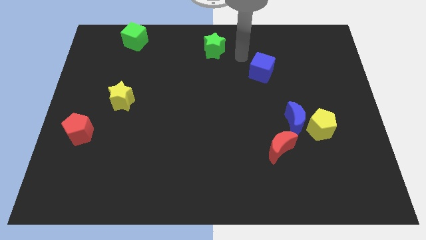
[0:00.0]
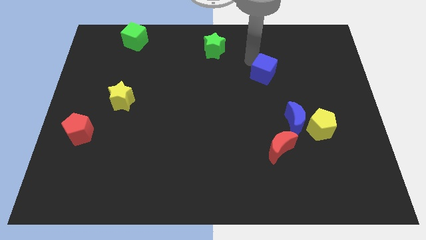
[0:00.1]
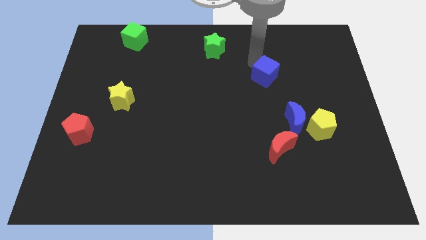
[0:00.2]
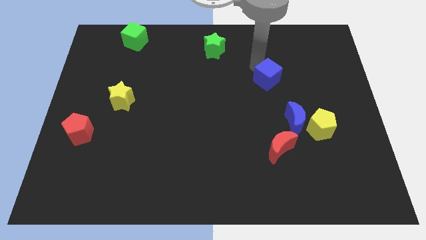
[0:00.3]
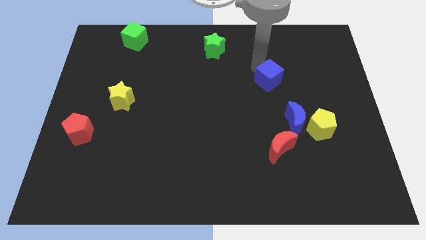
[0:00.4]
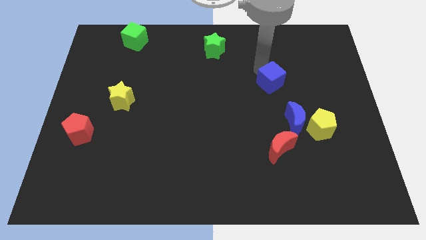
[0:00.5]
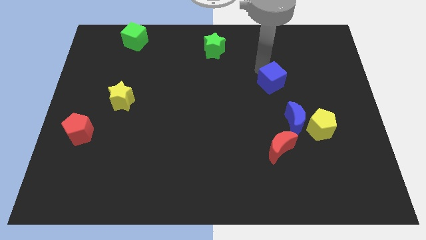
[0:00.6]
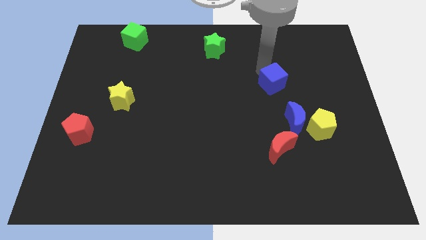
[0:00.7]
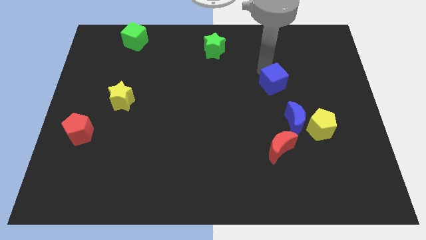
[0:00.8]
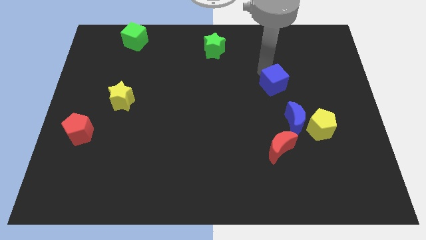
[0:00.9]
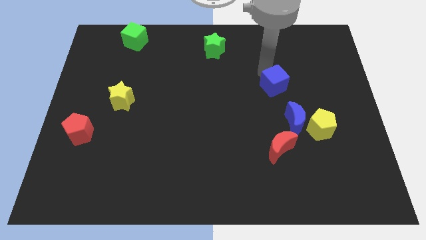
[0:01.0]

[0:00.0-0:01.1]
place blue cube on the top left of blue moon

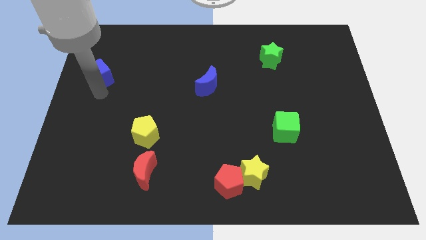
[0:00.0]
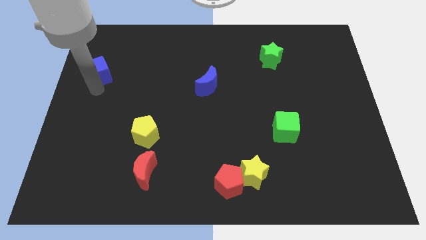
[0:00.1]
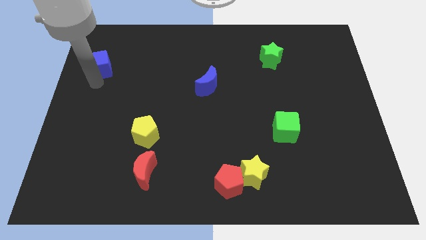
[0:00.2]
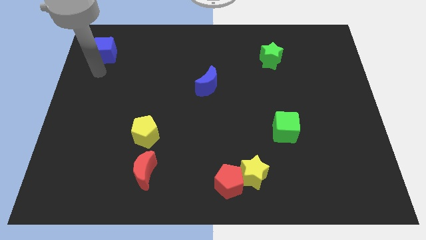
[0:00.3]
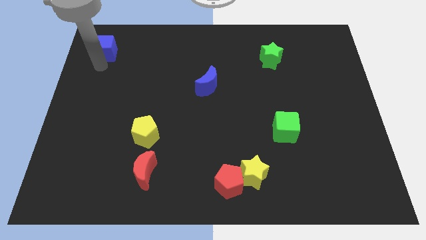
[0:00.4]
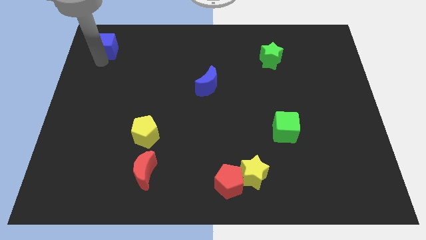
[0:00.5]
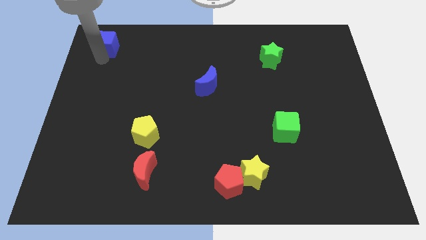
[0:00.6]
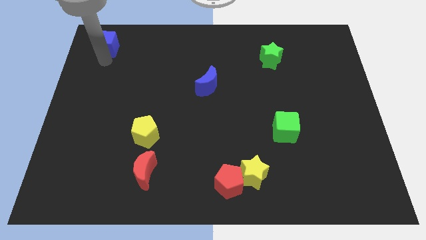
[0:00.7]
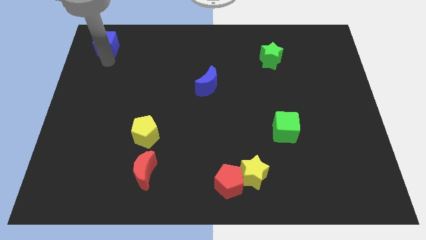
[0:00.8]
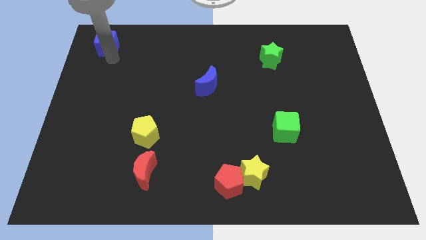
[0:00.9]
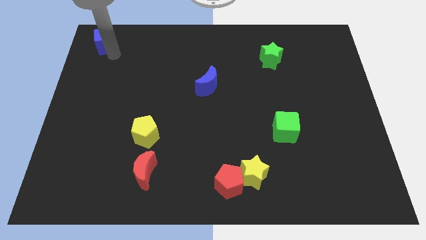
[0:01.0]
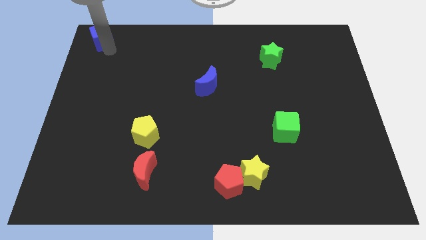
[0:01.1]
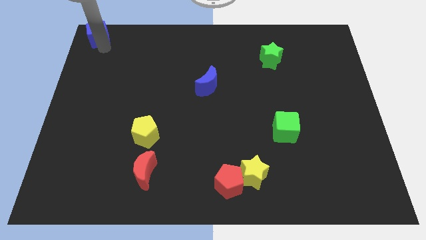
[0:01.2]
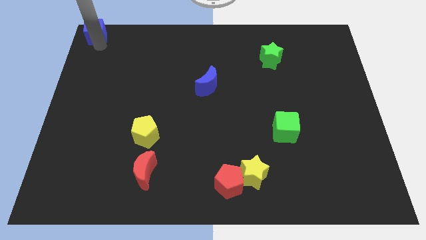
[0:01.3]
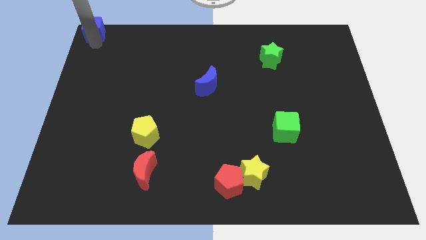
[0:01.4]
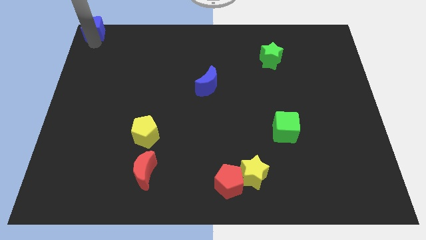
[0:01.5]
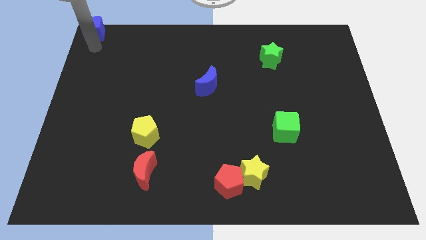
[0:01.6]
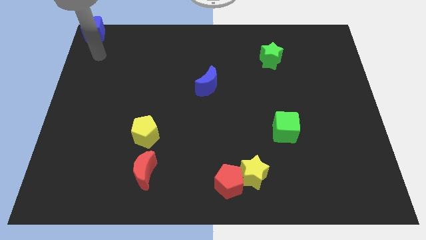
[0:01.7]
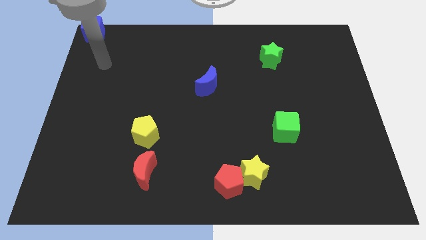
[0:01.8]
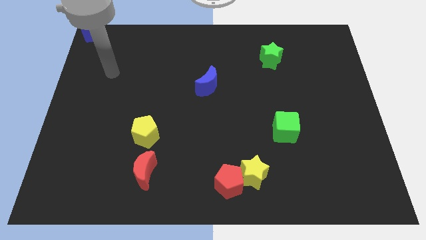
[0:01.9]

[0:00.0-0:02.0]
place the blue cube to the top left corner of the board

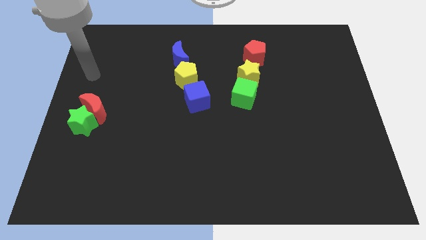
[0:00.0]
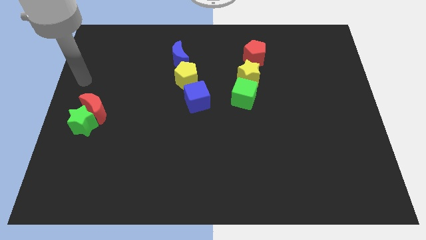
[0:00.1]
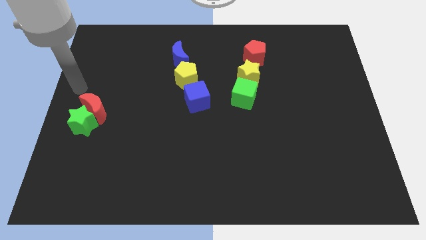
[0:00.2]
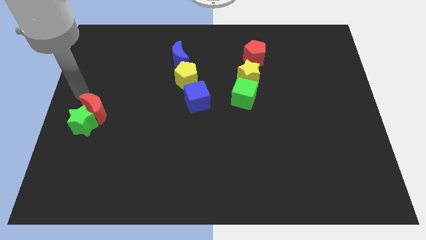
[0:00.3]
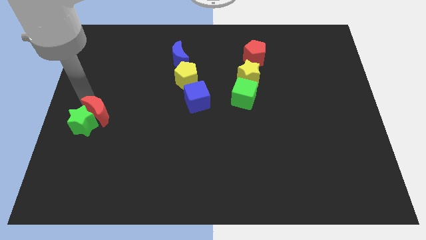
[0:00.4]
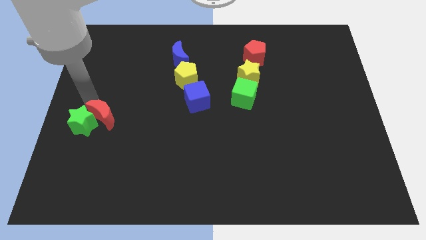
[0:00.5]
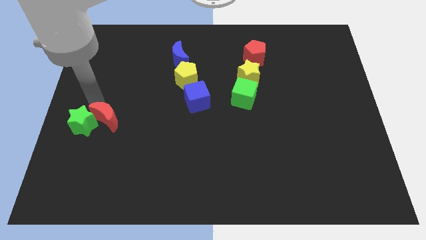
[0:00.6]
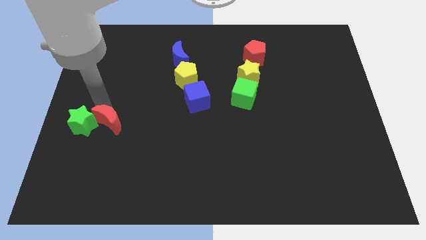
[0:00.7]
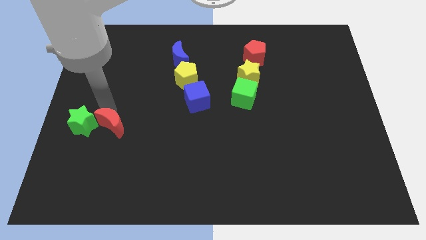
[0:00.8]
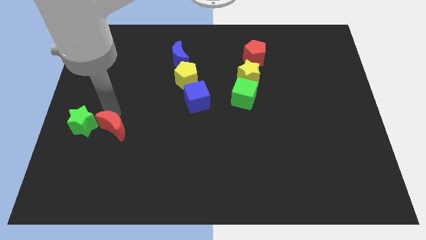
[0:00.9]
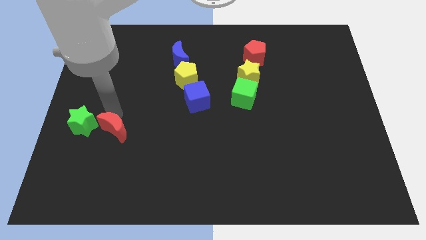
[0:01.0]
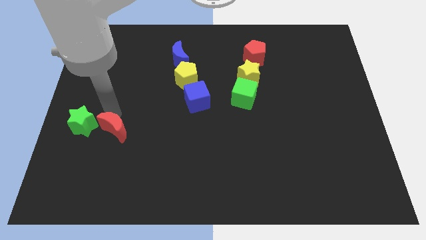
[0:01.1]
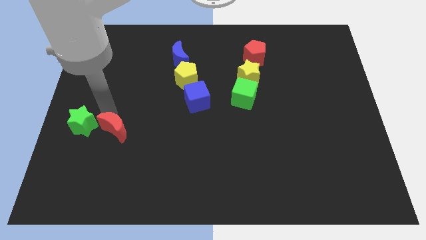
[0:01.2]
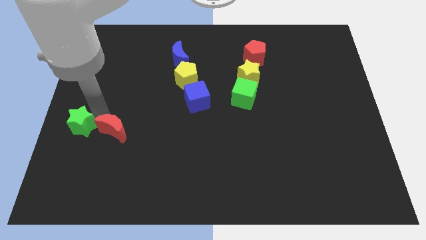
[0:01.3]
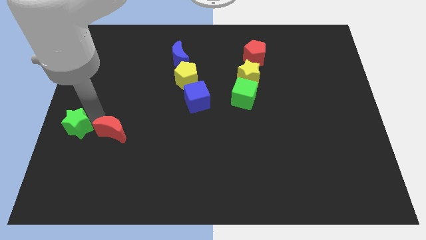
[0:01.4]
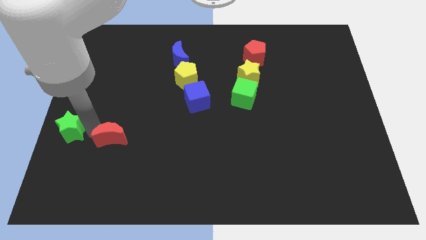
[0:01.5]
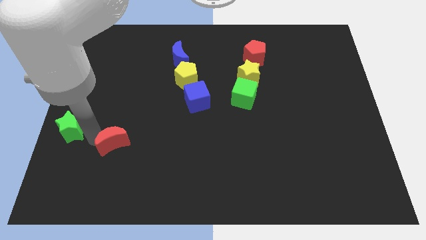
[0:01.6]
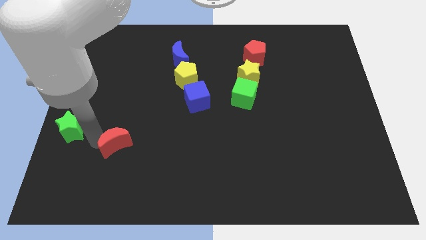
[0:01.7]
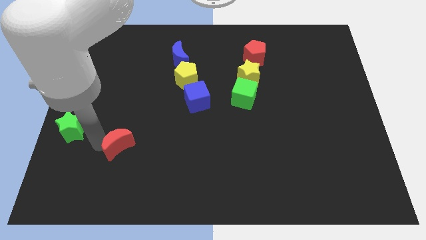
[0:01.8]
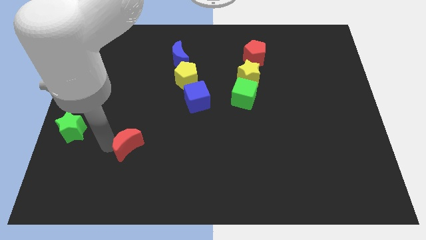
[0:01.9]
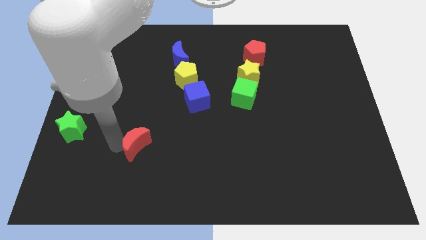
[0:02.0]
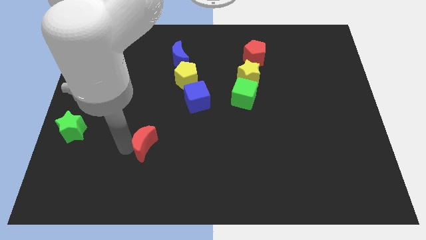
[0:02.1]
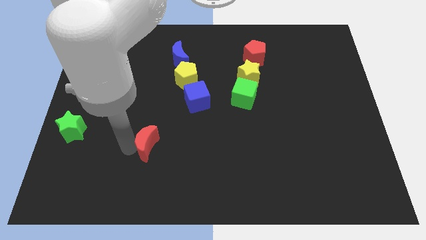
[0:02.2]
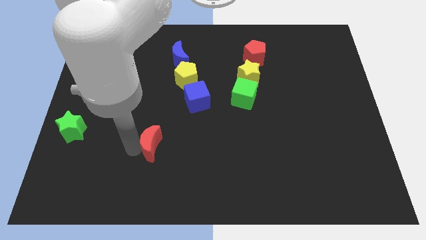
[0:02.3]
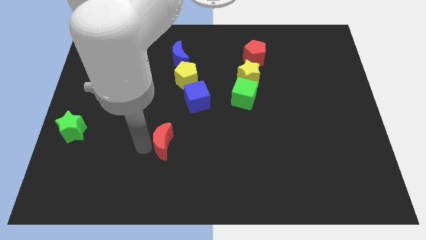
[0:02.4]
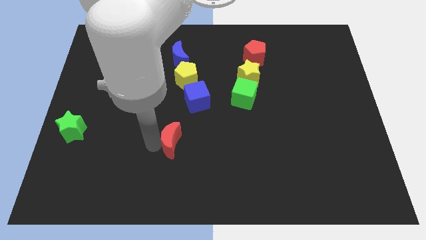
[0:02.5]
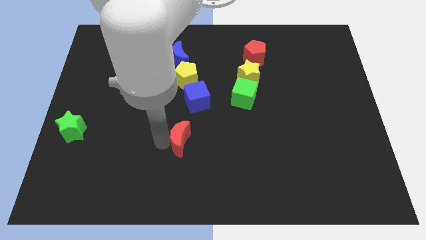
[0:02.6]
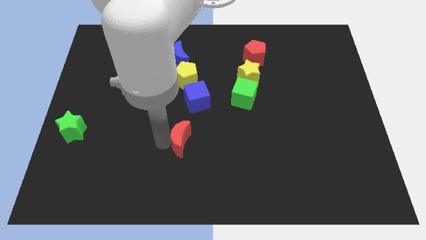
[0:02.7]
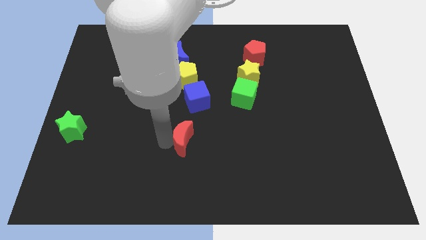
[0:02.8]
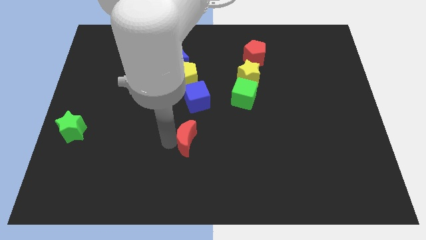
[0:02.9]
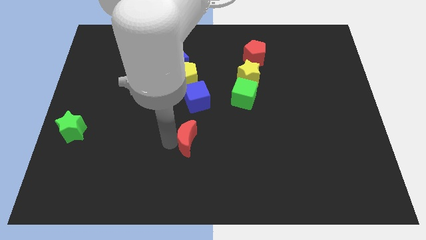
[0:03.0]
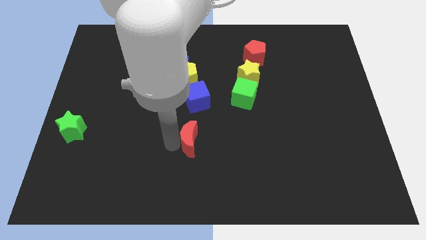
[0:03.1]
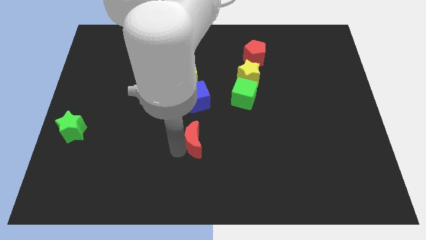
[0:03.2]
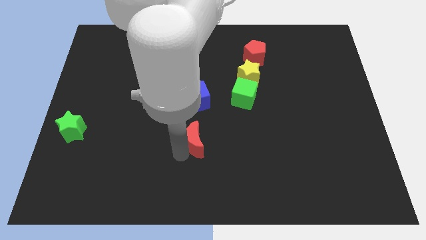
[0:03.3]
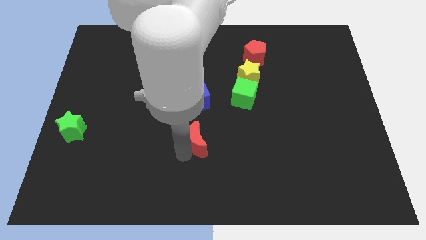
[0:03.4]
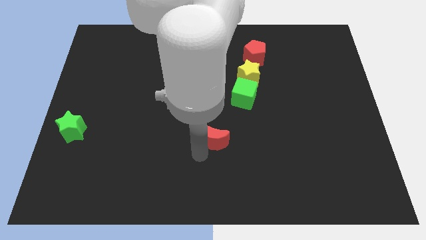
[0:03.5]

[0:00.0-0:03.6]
push the red crescent near to the center of the board

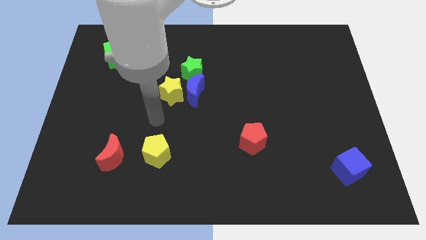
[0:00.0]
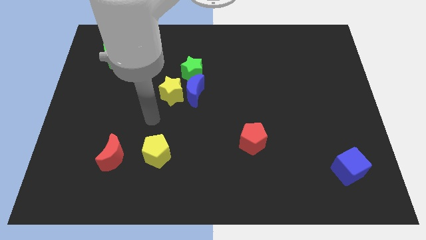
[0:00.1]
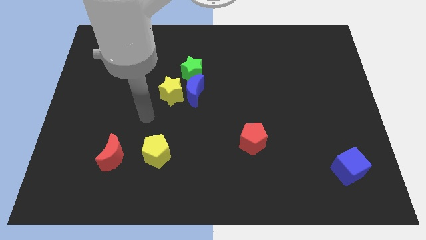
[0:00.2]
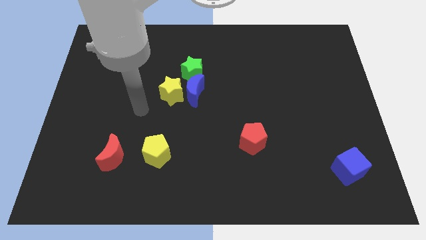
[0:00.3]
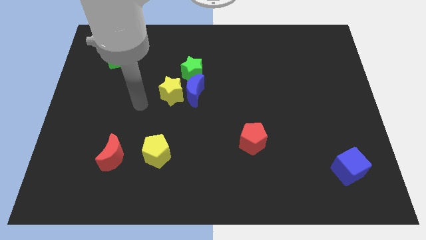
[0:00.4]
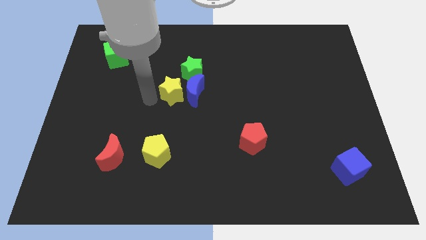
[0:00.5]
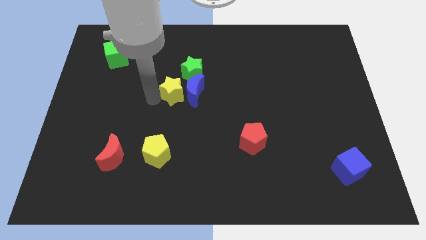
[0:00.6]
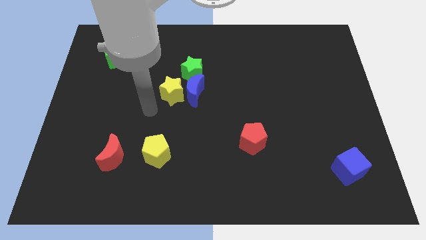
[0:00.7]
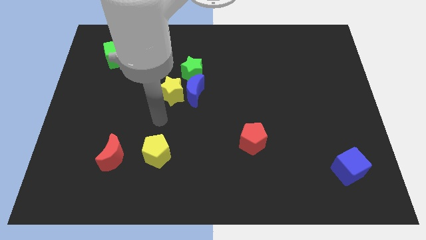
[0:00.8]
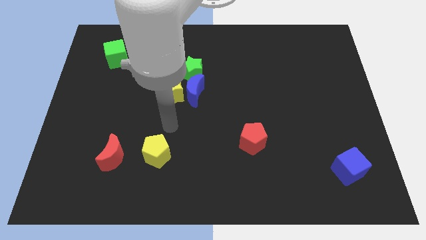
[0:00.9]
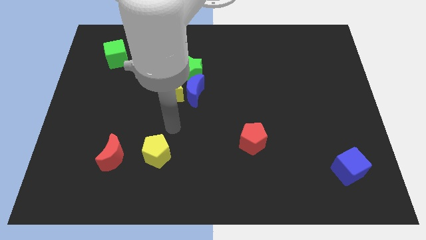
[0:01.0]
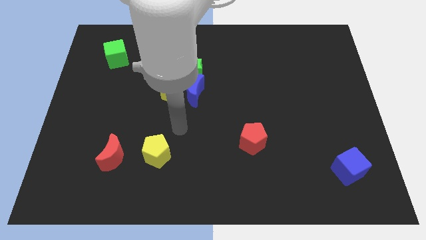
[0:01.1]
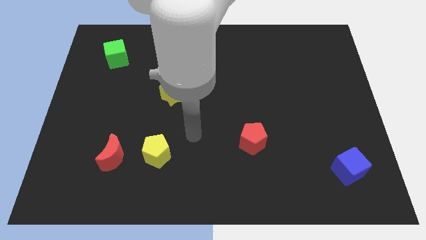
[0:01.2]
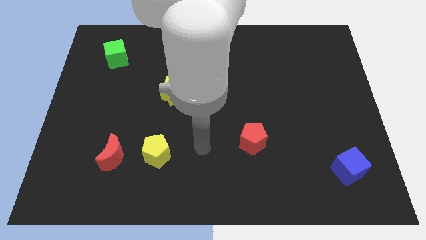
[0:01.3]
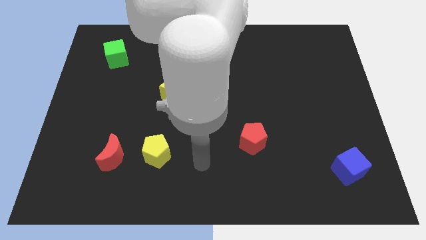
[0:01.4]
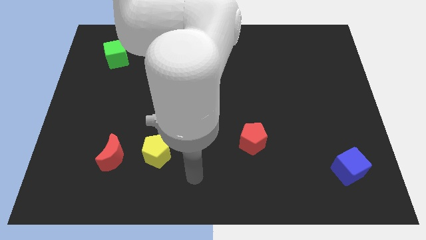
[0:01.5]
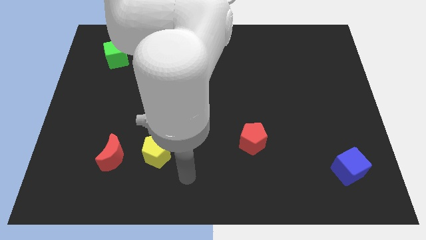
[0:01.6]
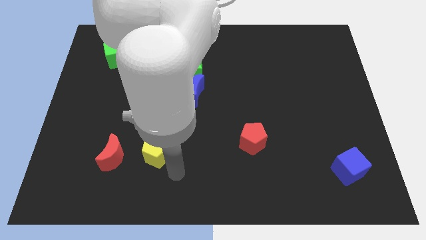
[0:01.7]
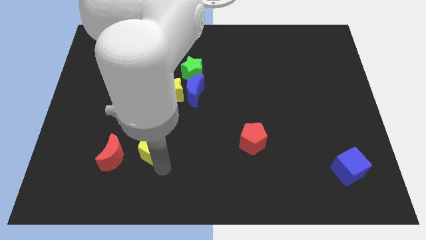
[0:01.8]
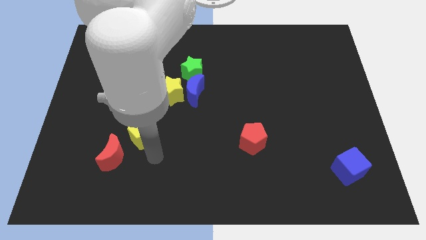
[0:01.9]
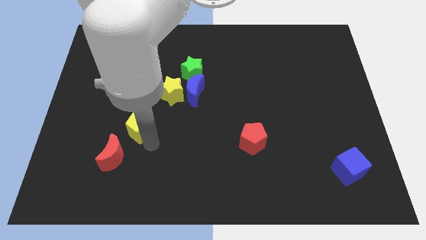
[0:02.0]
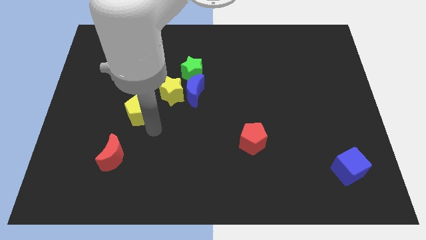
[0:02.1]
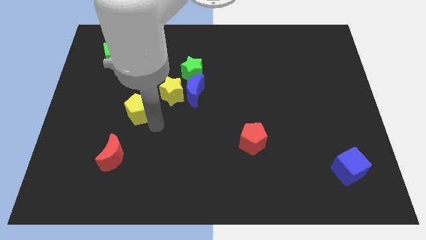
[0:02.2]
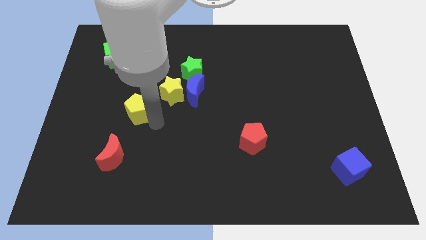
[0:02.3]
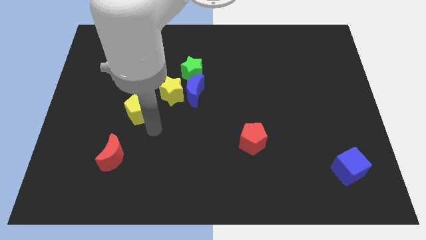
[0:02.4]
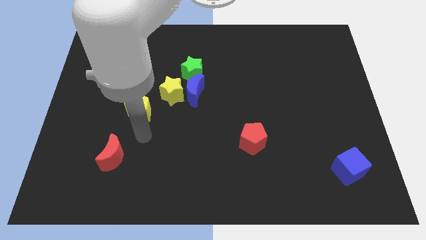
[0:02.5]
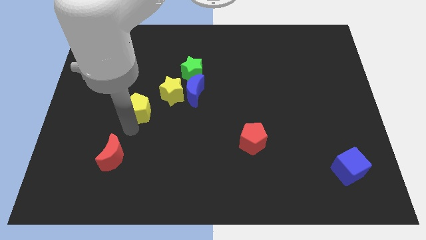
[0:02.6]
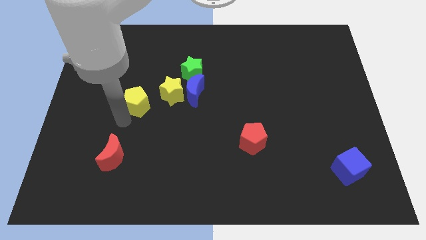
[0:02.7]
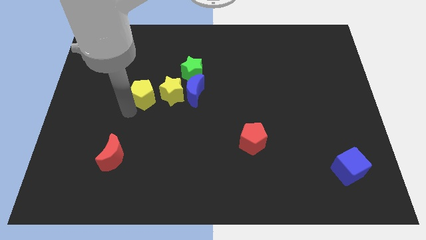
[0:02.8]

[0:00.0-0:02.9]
place the yellow pentagon to the left side of the yellow star
